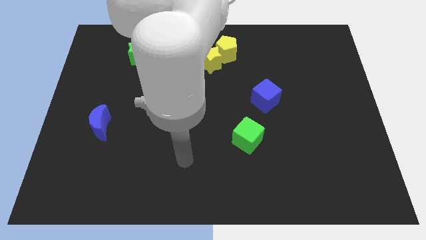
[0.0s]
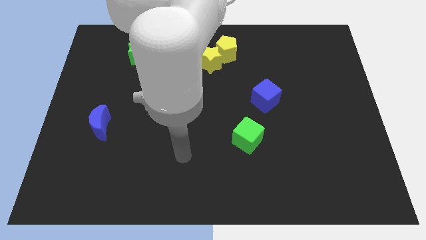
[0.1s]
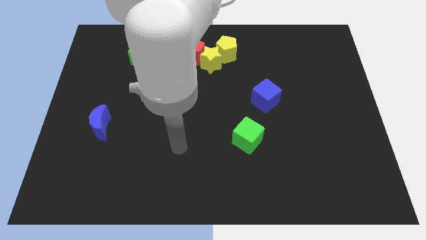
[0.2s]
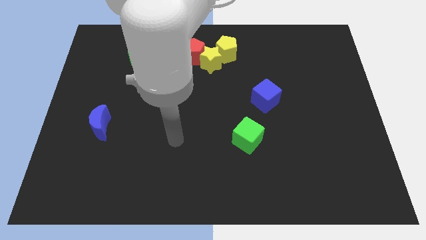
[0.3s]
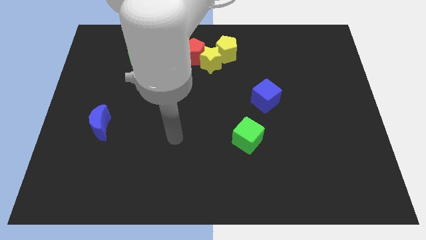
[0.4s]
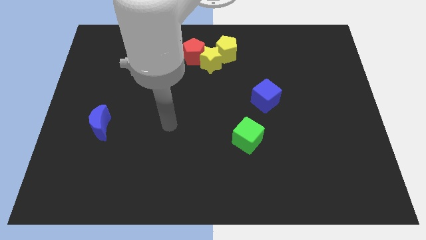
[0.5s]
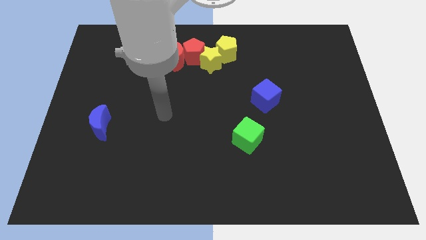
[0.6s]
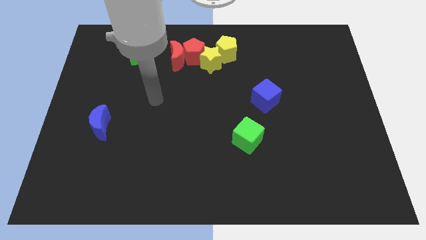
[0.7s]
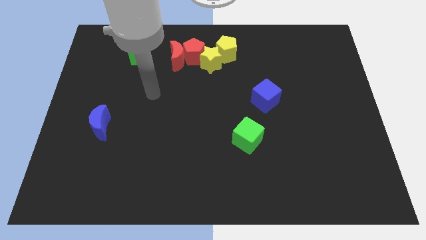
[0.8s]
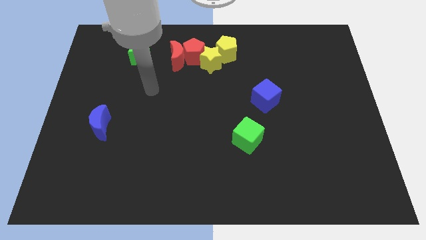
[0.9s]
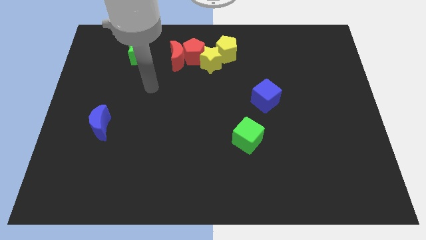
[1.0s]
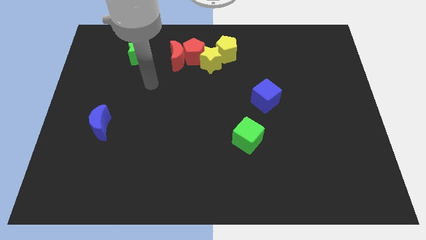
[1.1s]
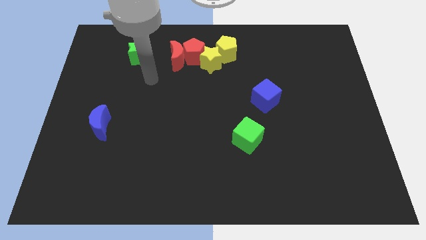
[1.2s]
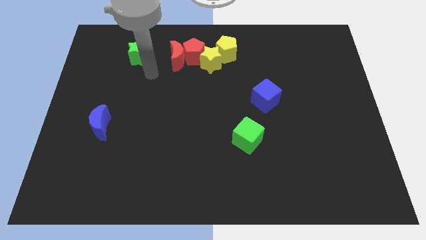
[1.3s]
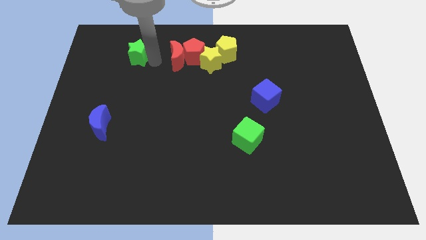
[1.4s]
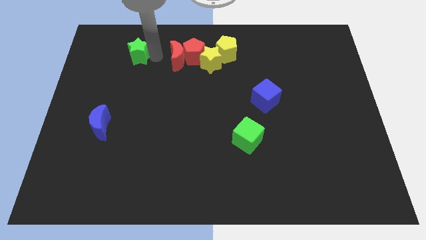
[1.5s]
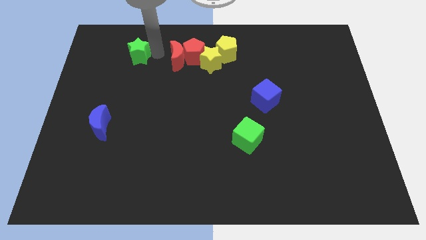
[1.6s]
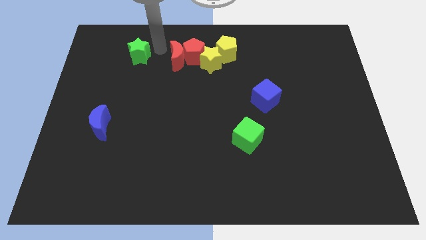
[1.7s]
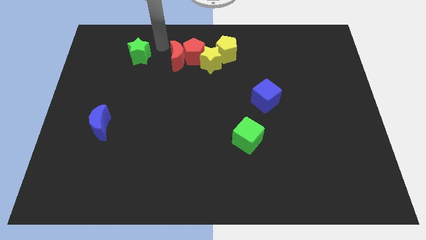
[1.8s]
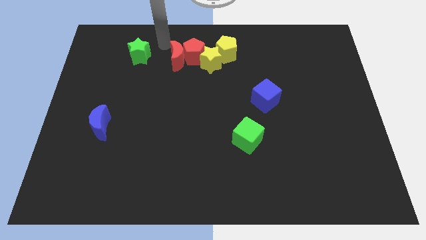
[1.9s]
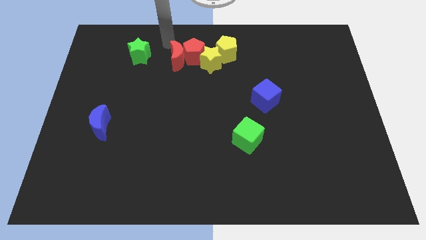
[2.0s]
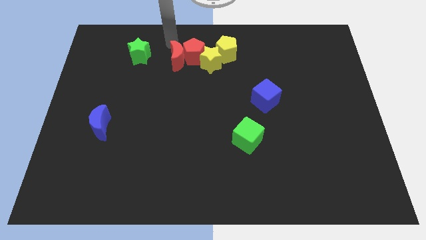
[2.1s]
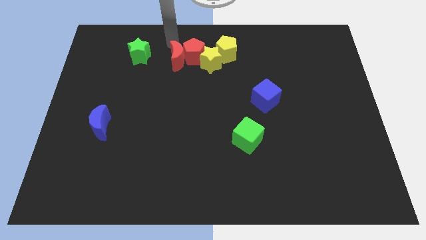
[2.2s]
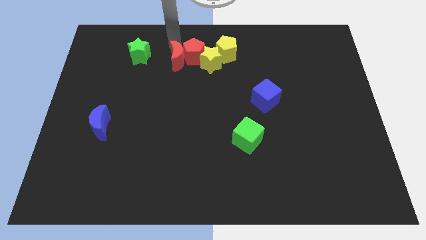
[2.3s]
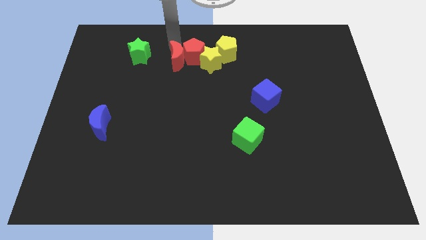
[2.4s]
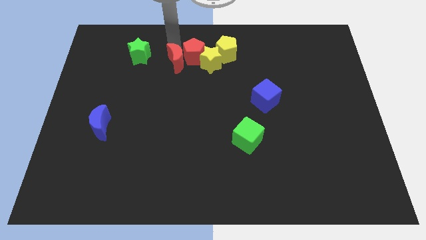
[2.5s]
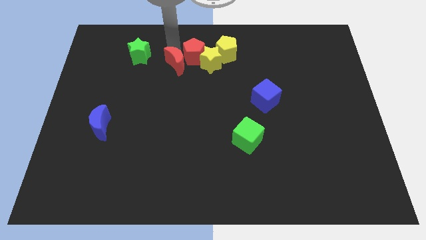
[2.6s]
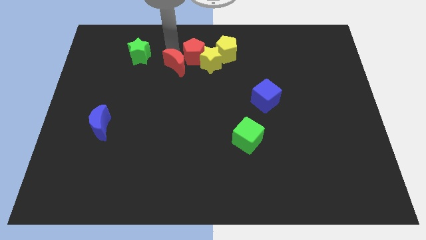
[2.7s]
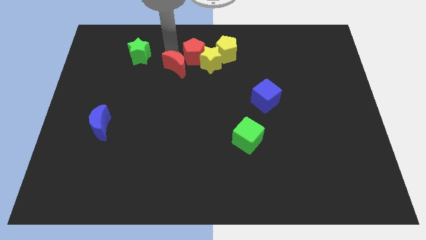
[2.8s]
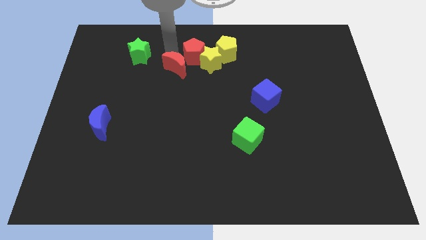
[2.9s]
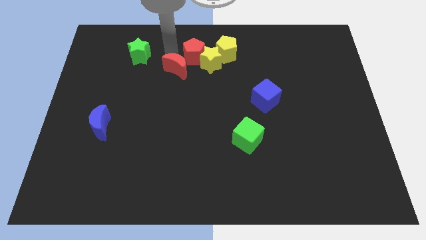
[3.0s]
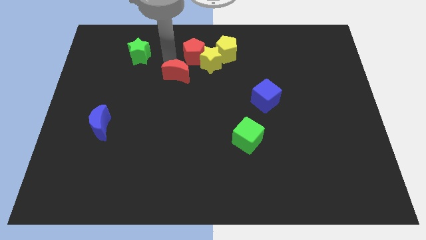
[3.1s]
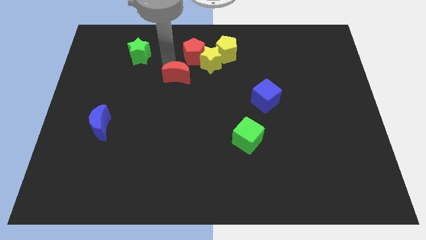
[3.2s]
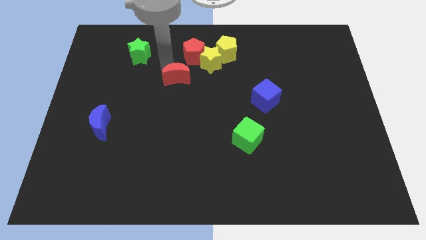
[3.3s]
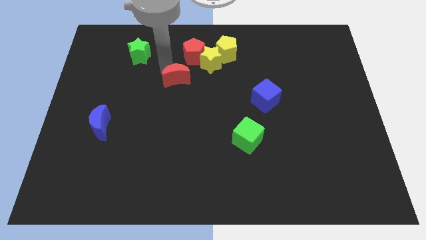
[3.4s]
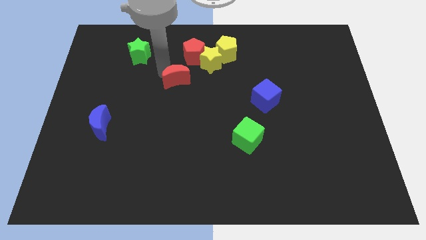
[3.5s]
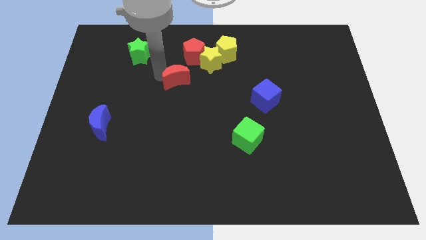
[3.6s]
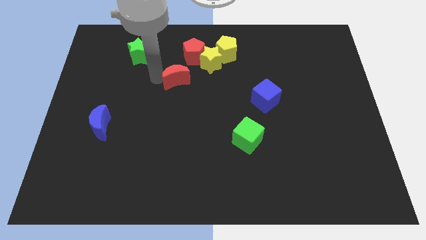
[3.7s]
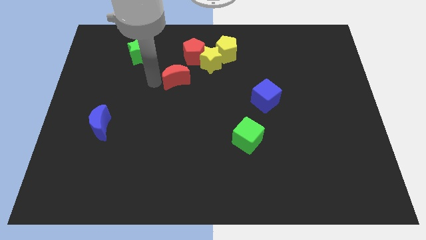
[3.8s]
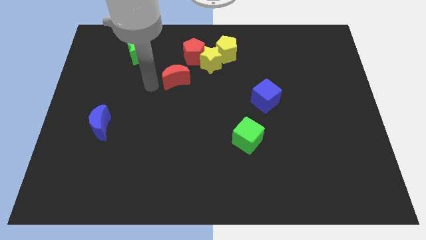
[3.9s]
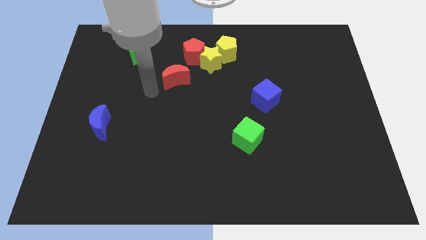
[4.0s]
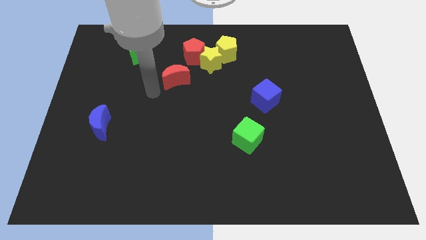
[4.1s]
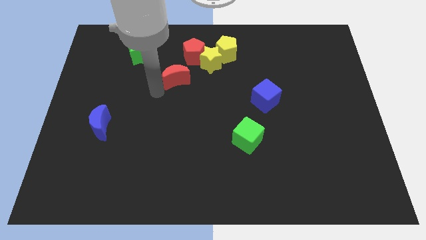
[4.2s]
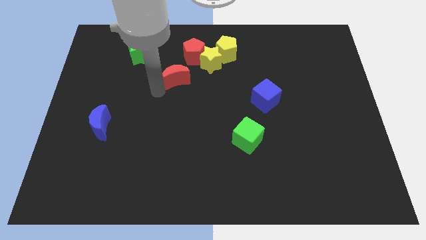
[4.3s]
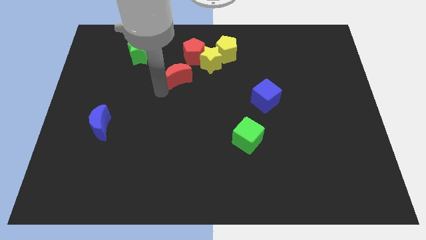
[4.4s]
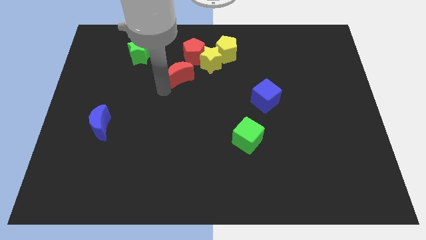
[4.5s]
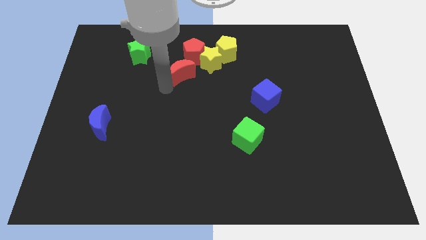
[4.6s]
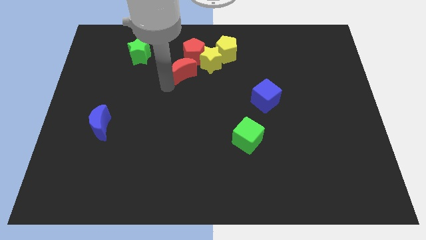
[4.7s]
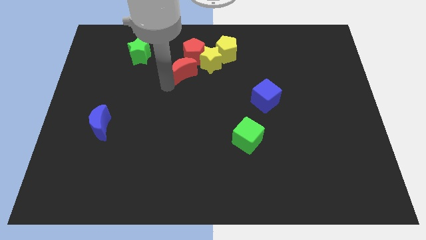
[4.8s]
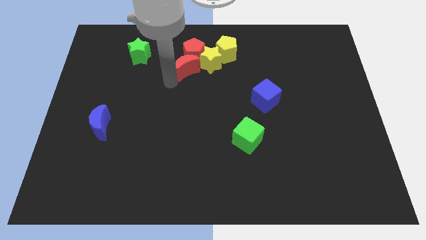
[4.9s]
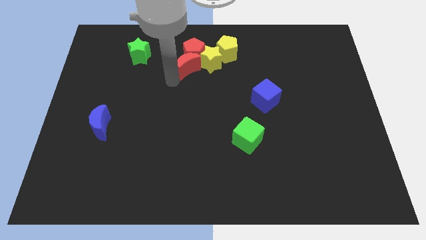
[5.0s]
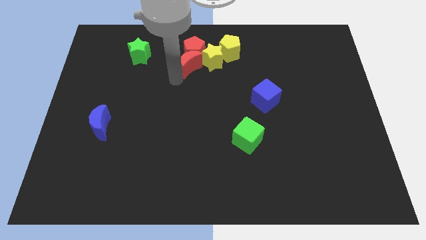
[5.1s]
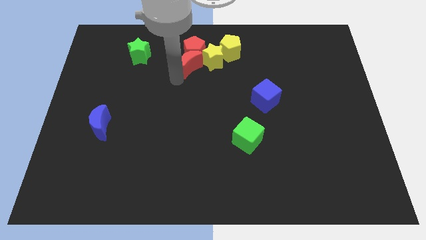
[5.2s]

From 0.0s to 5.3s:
push the red moon close to the yellow star

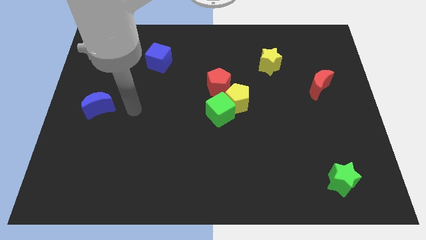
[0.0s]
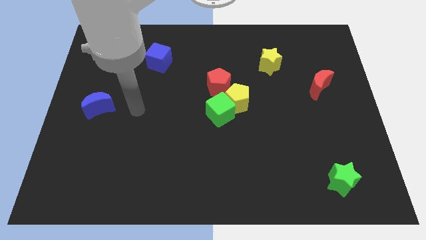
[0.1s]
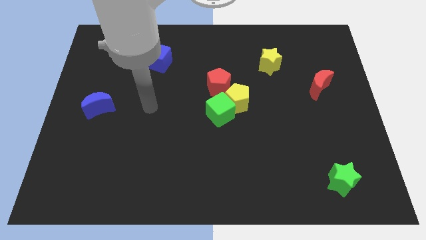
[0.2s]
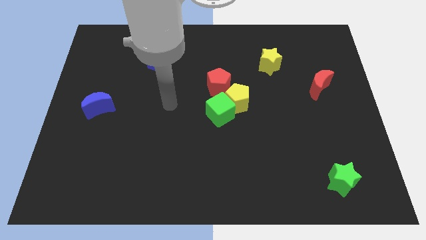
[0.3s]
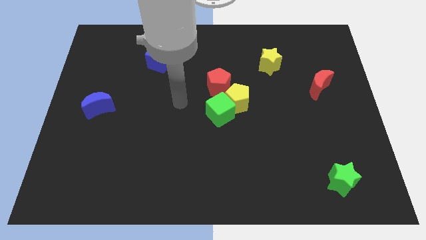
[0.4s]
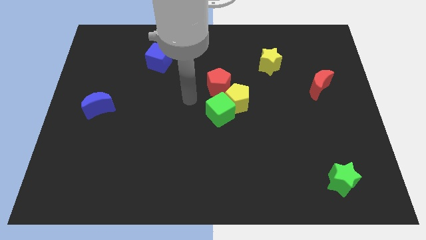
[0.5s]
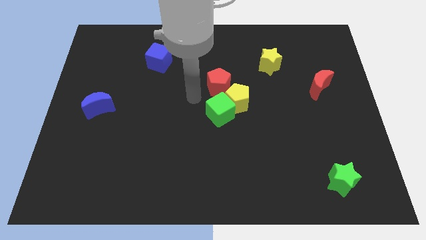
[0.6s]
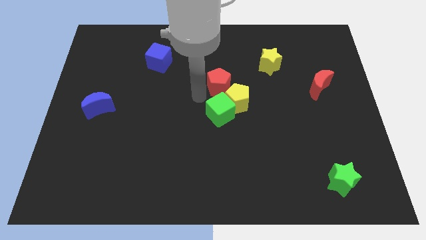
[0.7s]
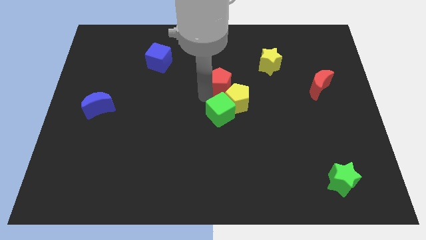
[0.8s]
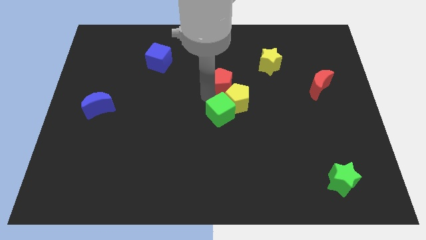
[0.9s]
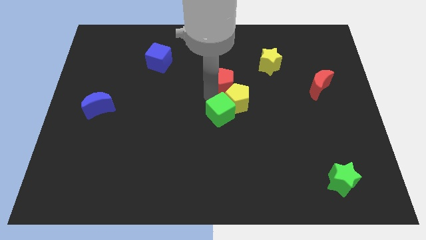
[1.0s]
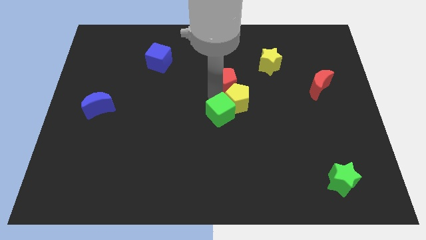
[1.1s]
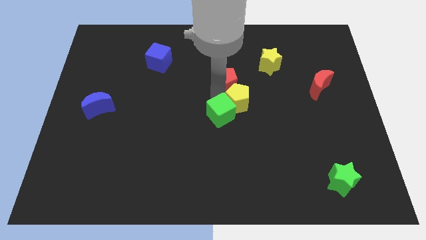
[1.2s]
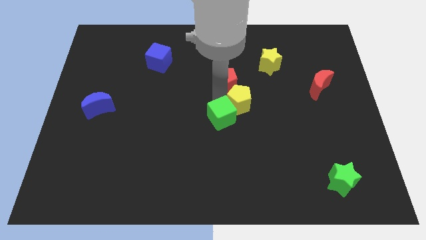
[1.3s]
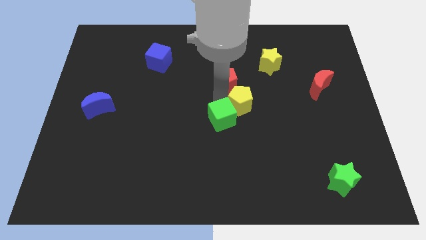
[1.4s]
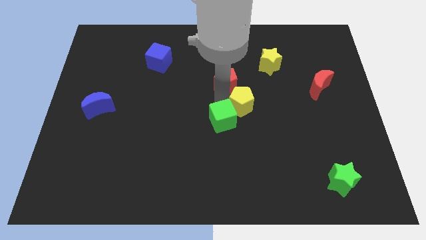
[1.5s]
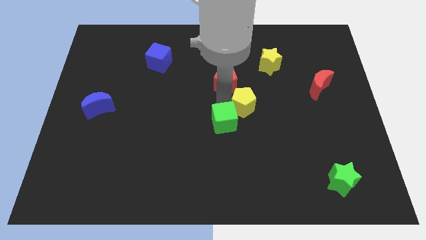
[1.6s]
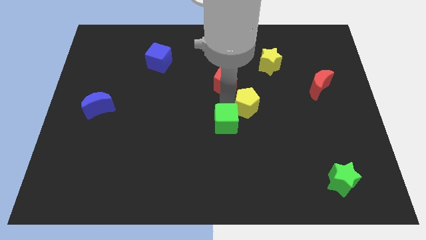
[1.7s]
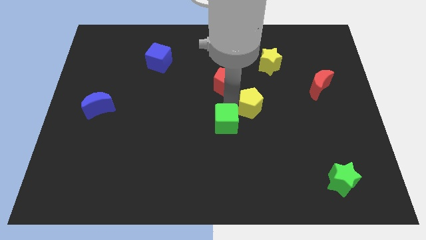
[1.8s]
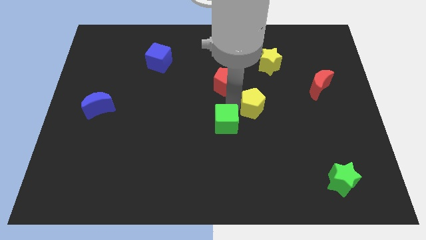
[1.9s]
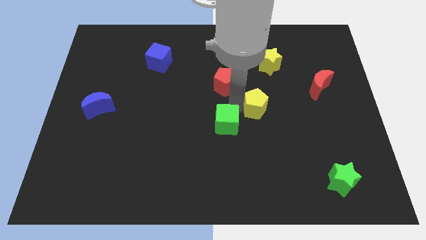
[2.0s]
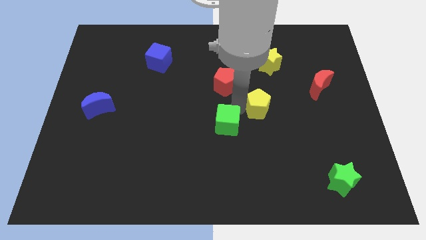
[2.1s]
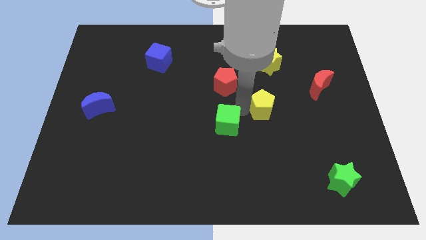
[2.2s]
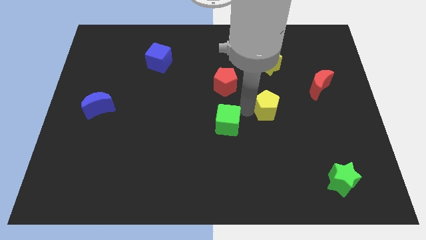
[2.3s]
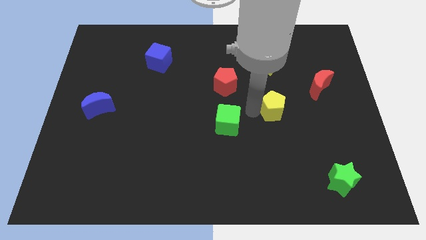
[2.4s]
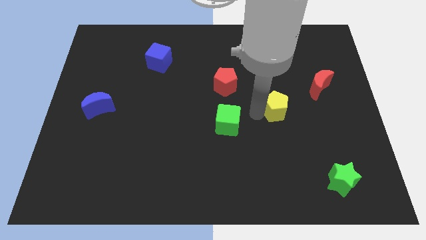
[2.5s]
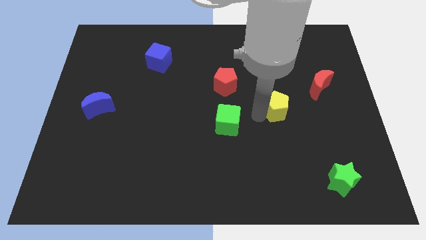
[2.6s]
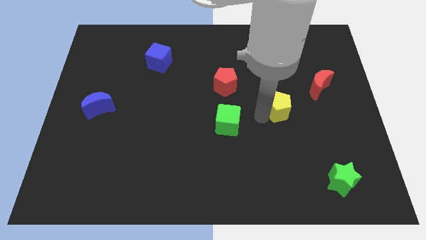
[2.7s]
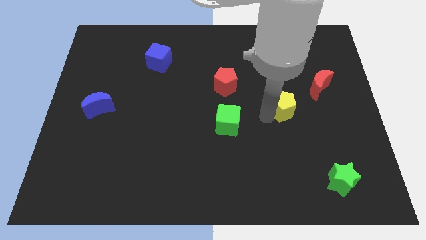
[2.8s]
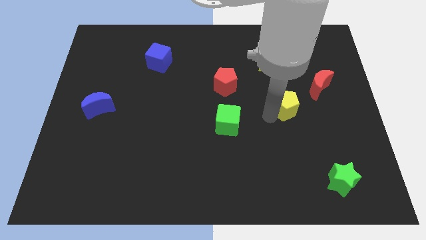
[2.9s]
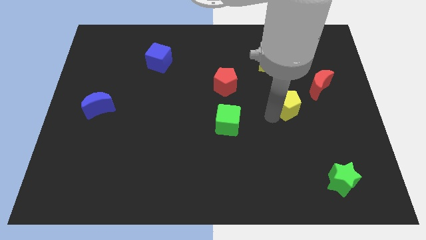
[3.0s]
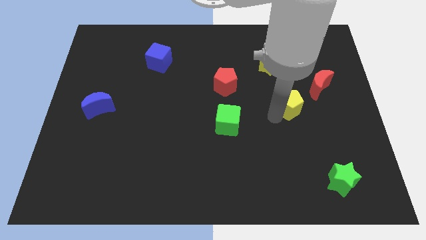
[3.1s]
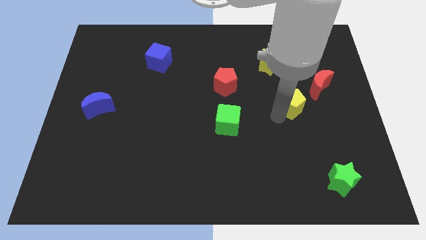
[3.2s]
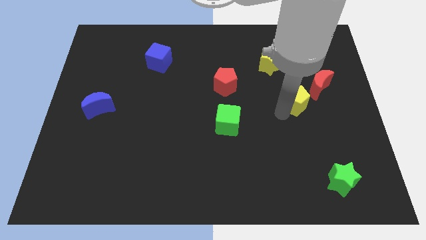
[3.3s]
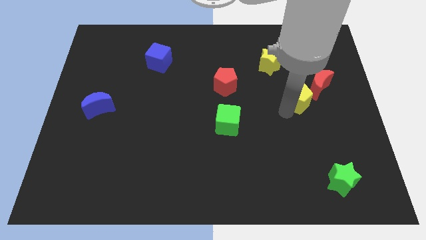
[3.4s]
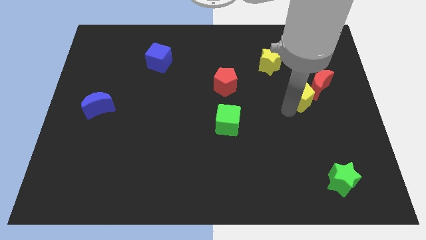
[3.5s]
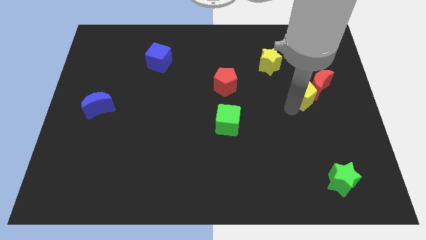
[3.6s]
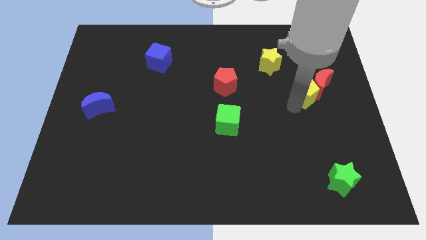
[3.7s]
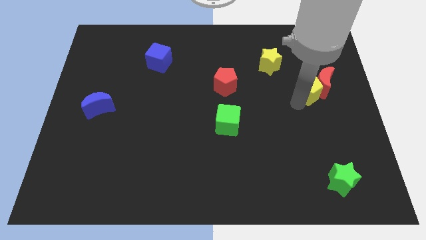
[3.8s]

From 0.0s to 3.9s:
slide the yellow pentagon close to the red moon
